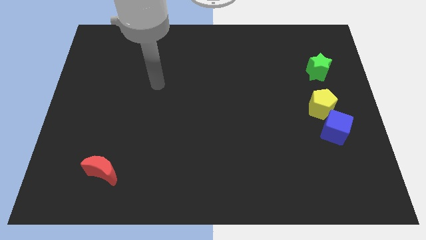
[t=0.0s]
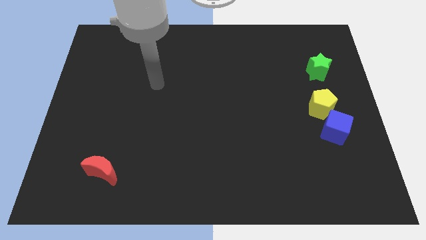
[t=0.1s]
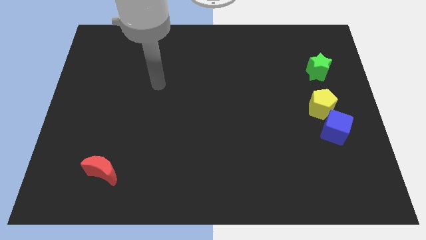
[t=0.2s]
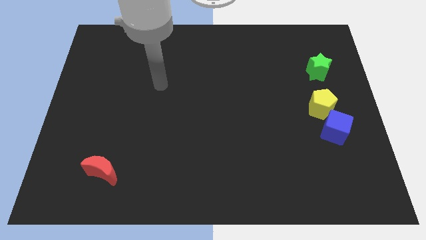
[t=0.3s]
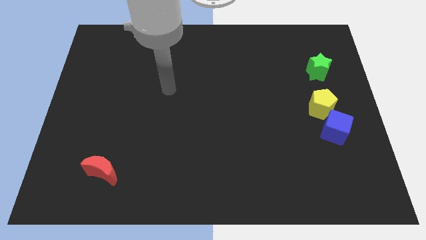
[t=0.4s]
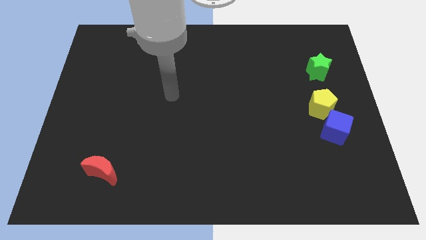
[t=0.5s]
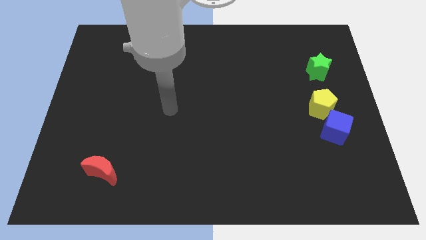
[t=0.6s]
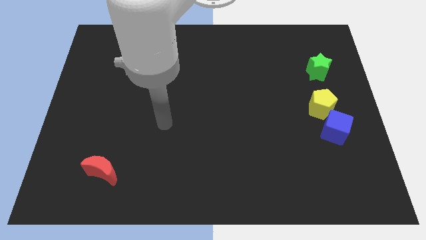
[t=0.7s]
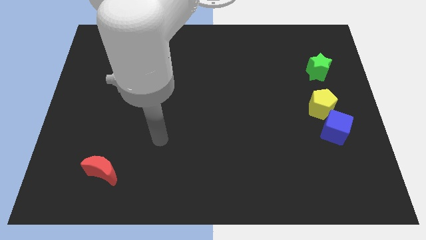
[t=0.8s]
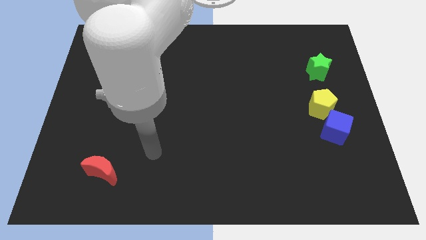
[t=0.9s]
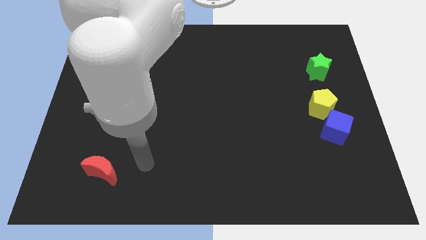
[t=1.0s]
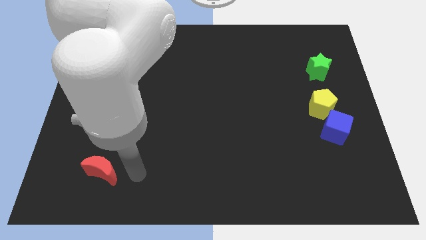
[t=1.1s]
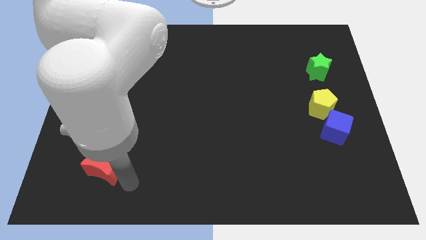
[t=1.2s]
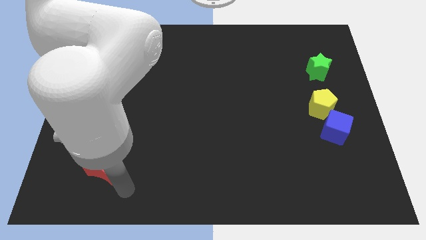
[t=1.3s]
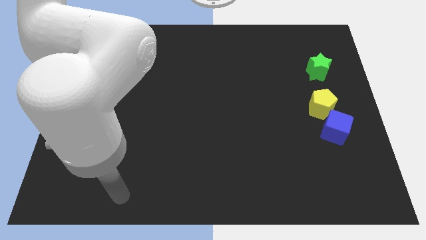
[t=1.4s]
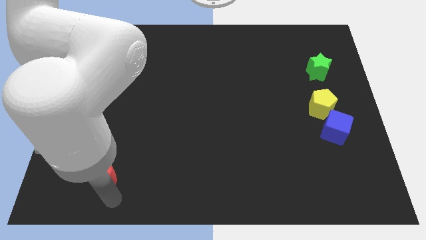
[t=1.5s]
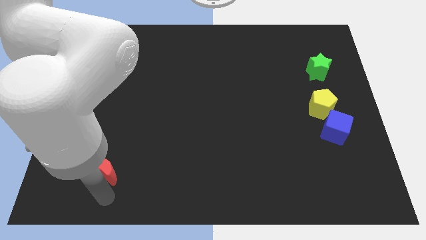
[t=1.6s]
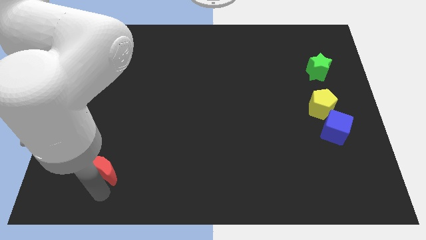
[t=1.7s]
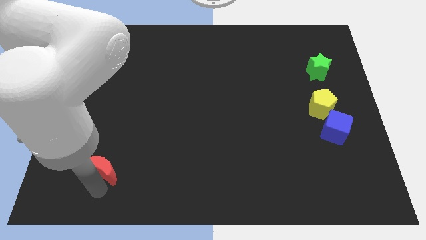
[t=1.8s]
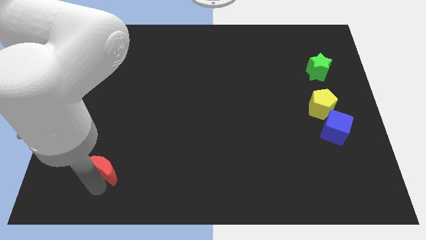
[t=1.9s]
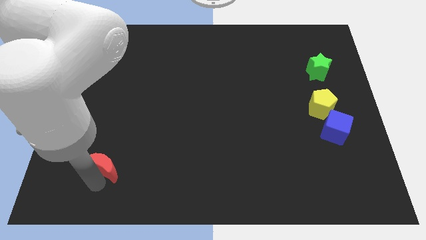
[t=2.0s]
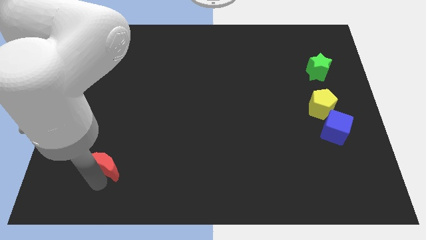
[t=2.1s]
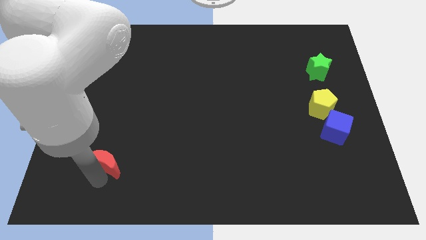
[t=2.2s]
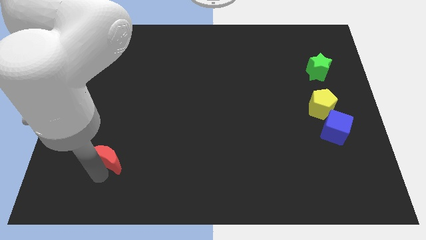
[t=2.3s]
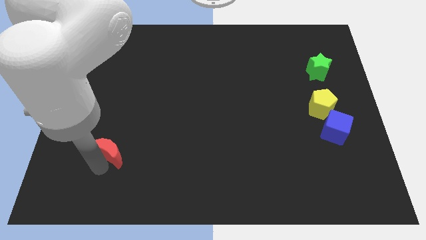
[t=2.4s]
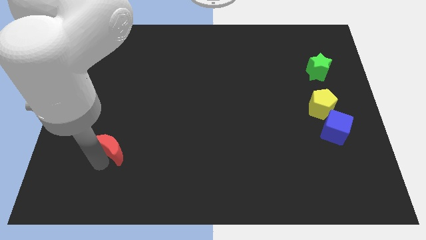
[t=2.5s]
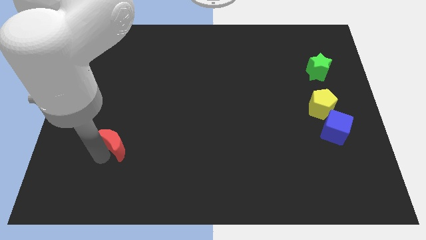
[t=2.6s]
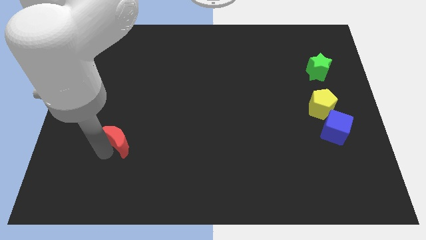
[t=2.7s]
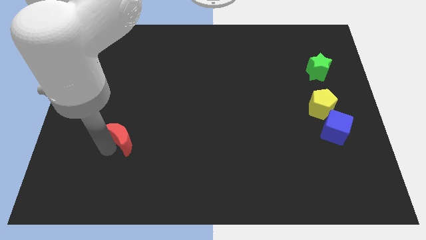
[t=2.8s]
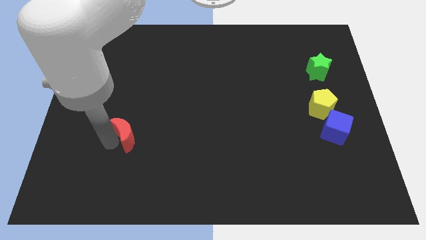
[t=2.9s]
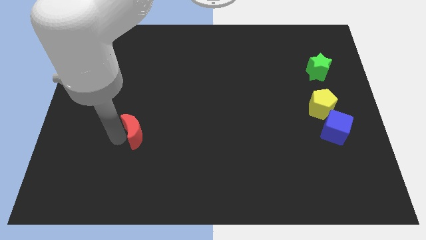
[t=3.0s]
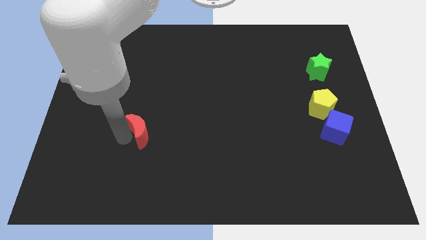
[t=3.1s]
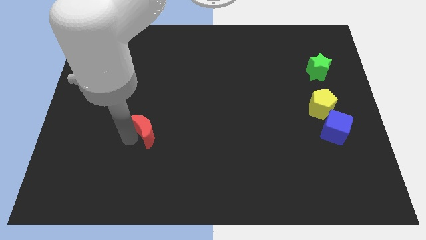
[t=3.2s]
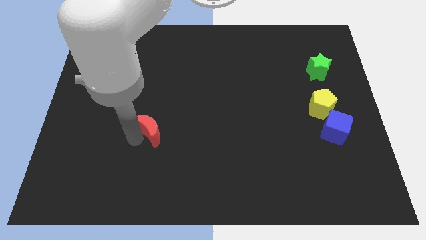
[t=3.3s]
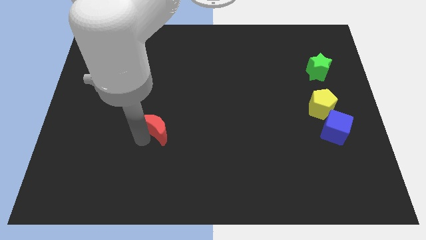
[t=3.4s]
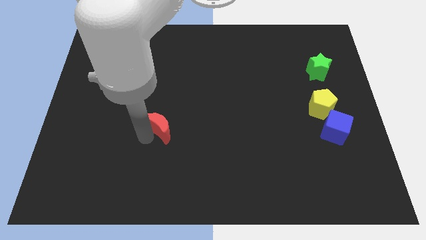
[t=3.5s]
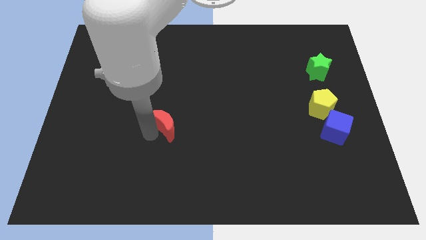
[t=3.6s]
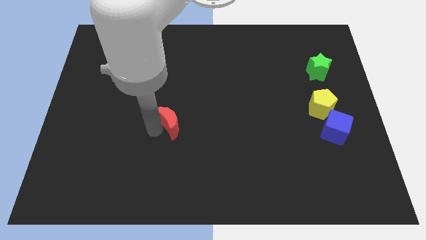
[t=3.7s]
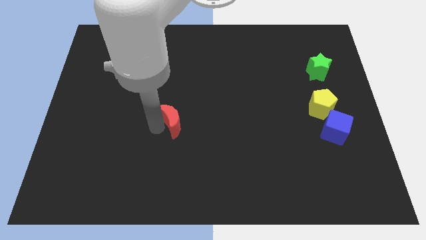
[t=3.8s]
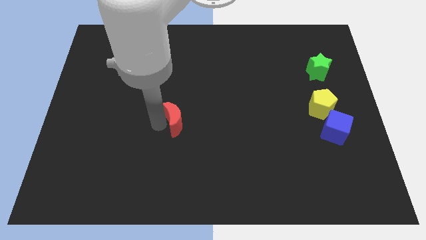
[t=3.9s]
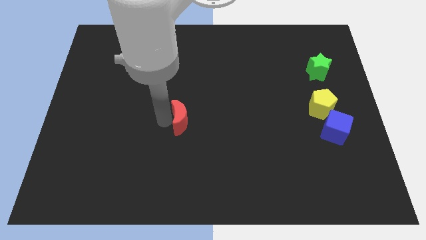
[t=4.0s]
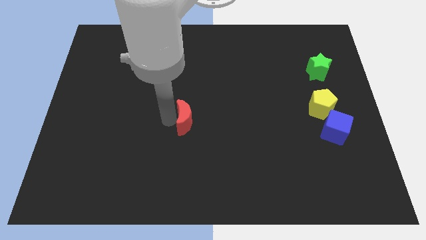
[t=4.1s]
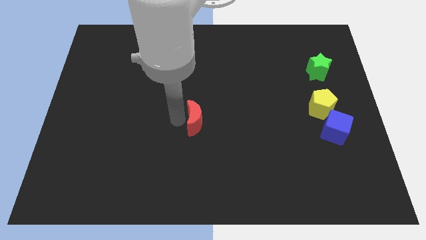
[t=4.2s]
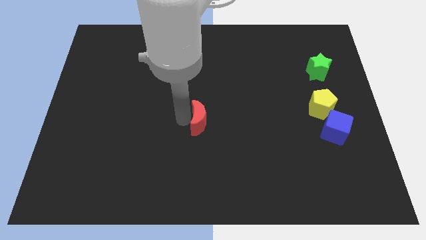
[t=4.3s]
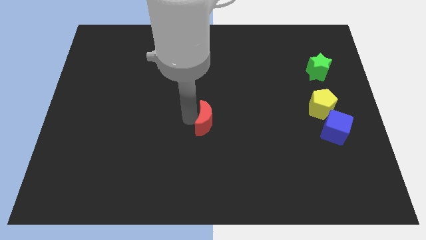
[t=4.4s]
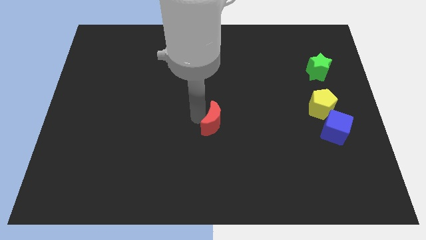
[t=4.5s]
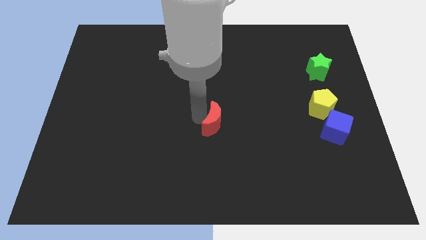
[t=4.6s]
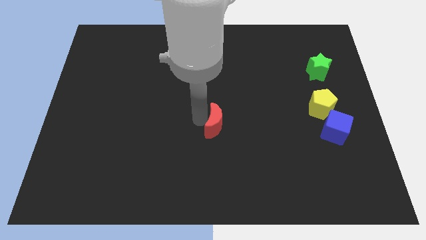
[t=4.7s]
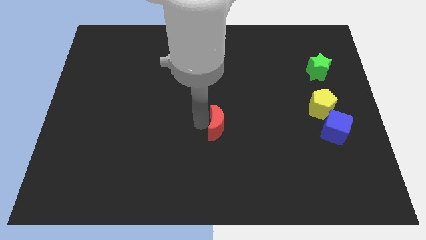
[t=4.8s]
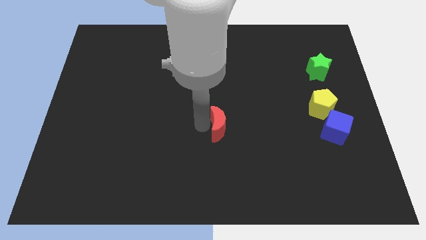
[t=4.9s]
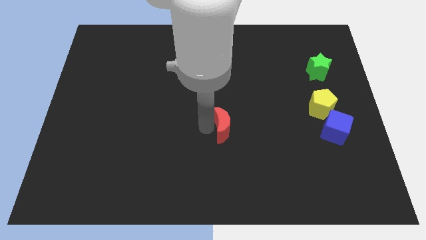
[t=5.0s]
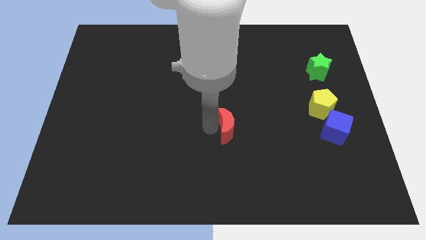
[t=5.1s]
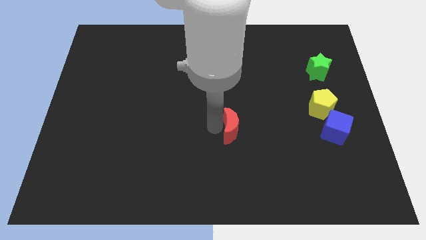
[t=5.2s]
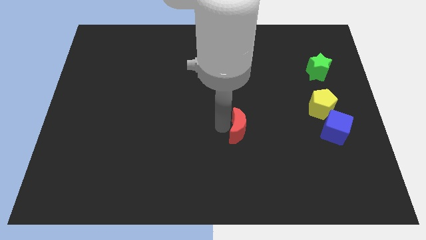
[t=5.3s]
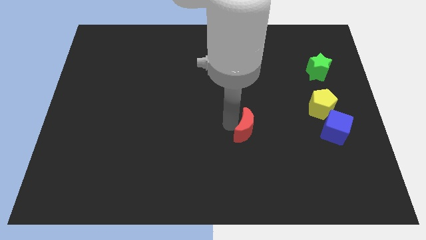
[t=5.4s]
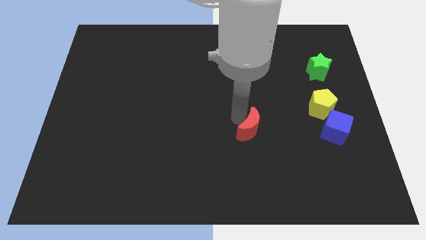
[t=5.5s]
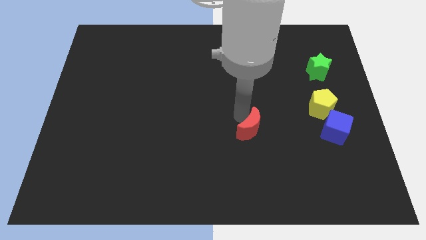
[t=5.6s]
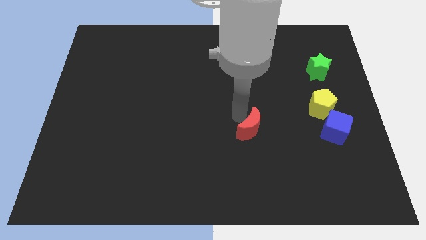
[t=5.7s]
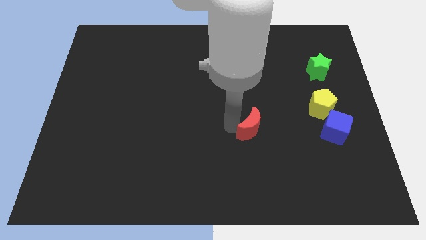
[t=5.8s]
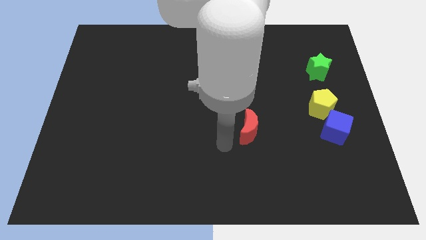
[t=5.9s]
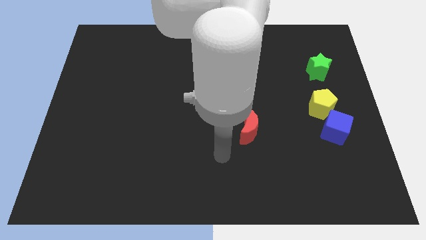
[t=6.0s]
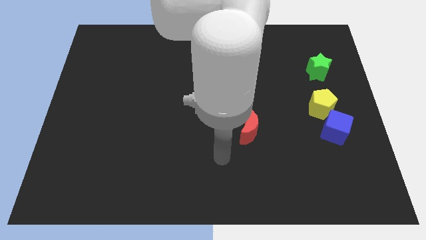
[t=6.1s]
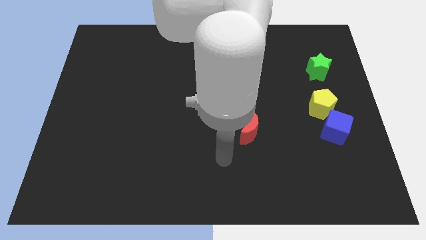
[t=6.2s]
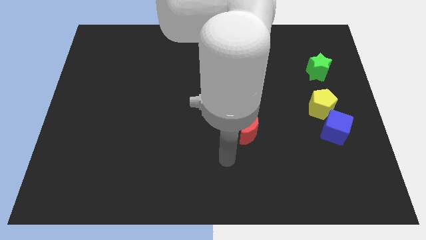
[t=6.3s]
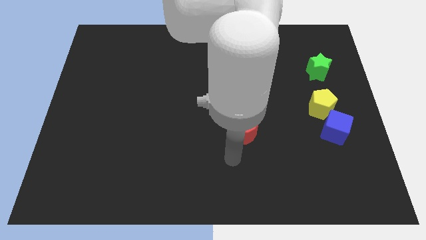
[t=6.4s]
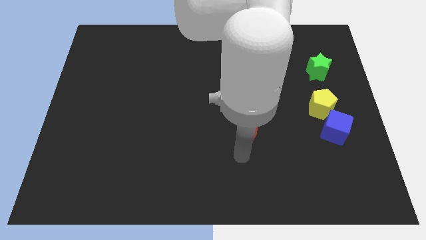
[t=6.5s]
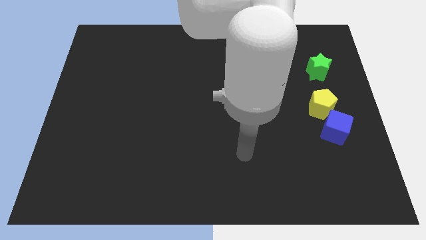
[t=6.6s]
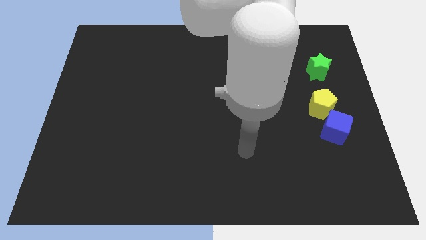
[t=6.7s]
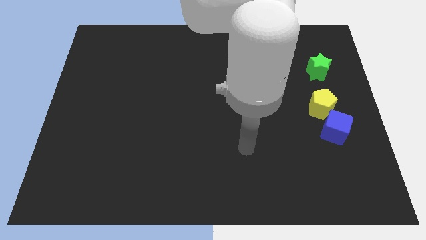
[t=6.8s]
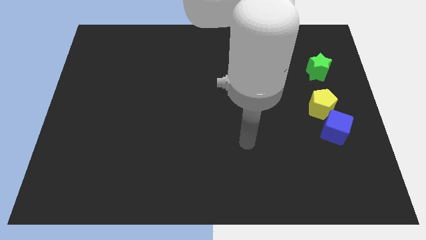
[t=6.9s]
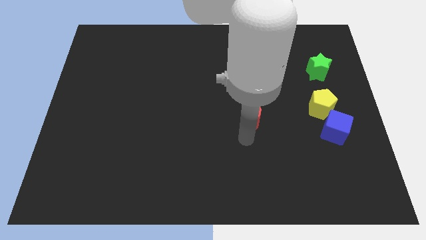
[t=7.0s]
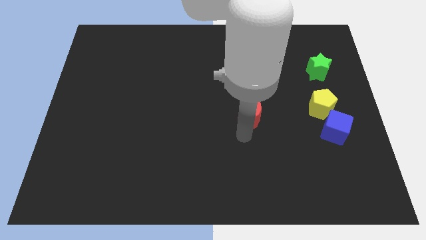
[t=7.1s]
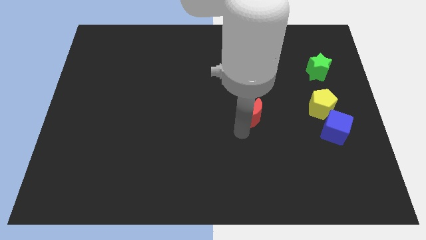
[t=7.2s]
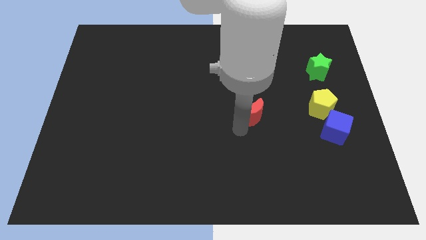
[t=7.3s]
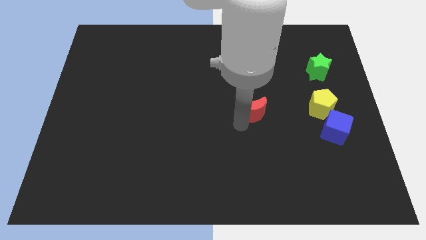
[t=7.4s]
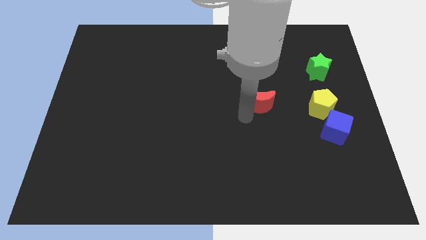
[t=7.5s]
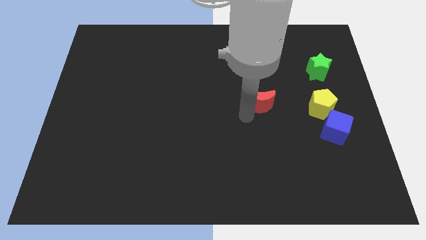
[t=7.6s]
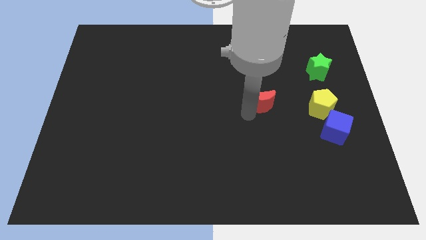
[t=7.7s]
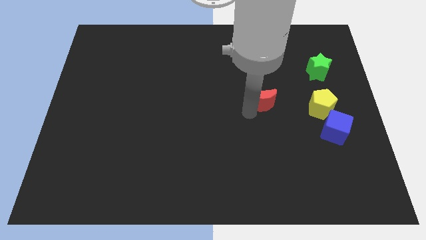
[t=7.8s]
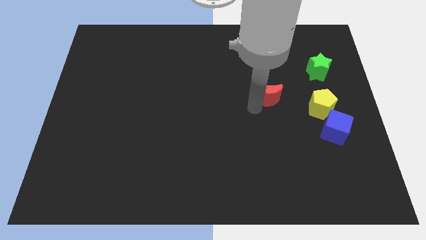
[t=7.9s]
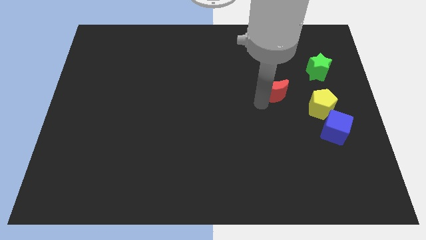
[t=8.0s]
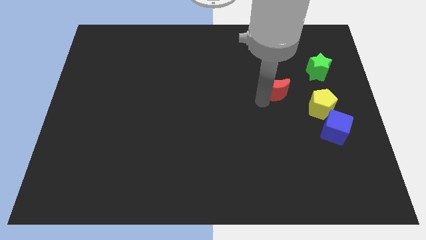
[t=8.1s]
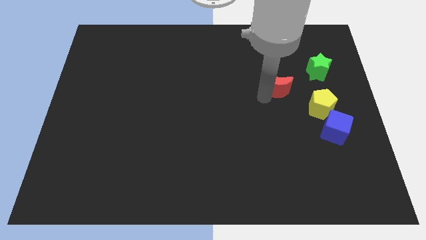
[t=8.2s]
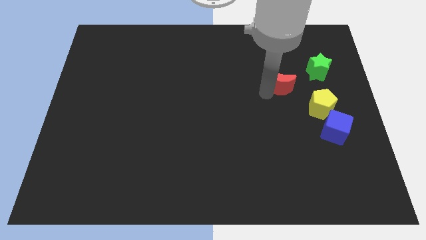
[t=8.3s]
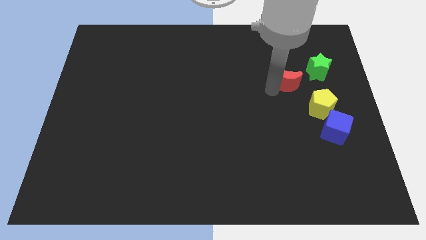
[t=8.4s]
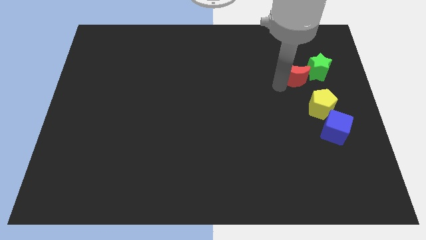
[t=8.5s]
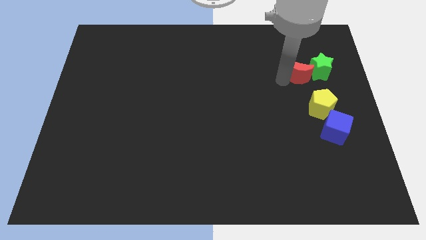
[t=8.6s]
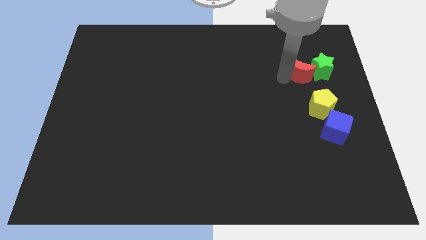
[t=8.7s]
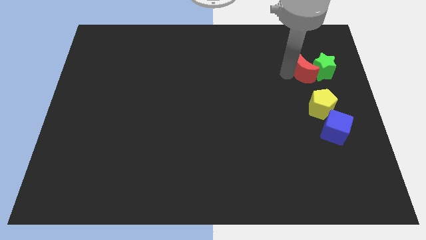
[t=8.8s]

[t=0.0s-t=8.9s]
move the moon close to the green star
